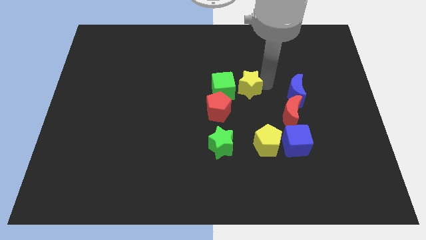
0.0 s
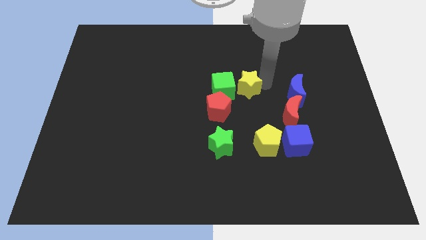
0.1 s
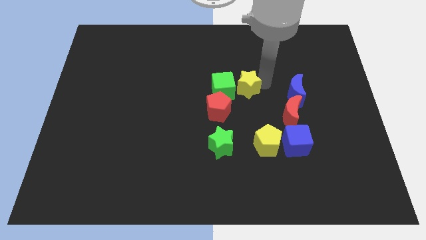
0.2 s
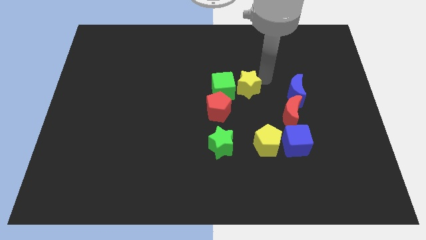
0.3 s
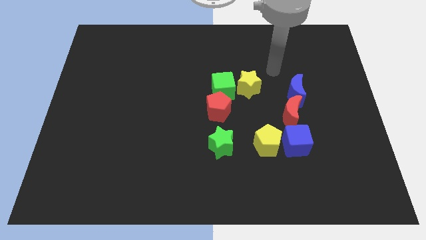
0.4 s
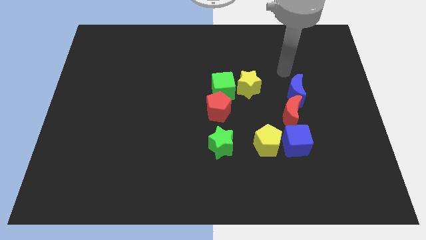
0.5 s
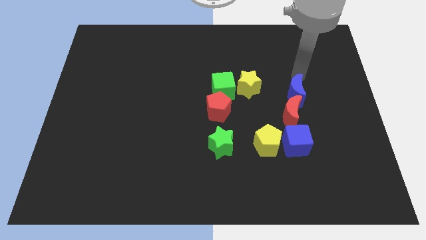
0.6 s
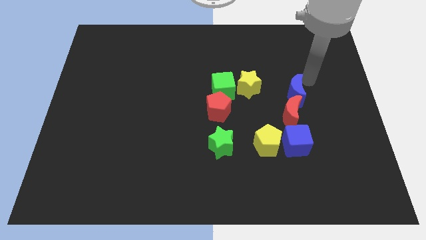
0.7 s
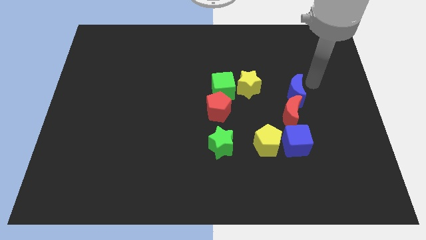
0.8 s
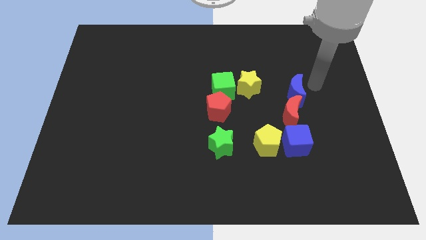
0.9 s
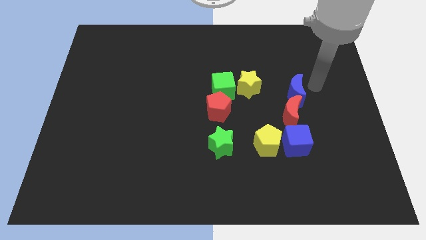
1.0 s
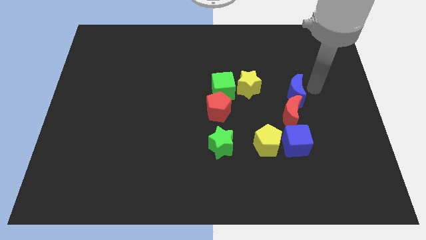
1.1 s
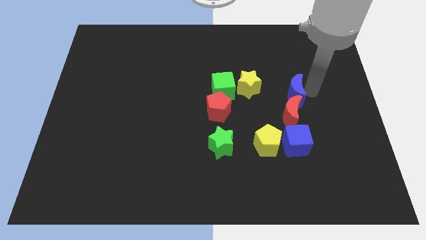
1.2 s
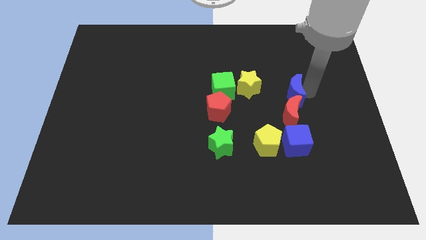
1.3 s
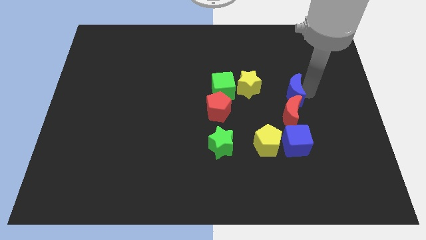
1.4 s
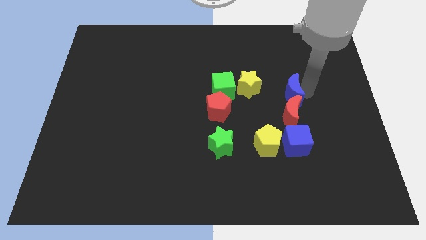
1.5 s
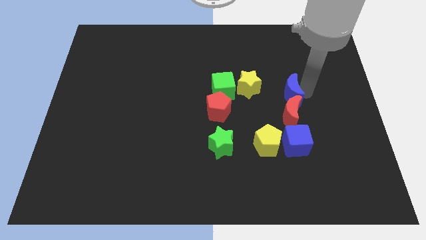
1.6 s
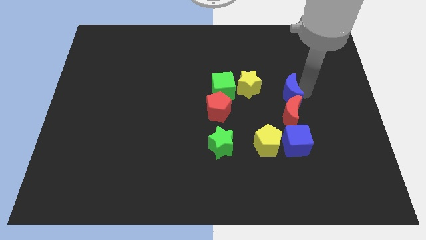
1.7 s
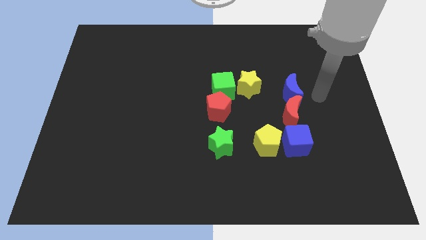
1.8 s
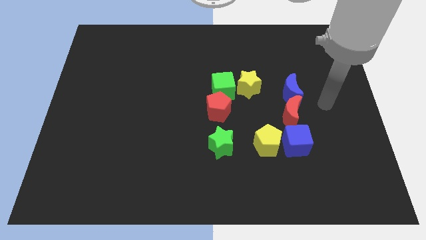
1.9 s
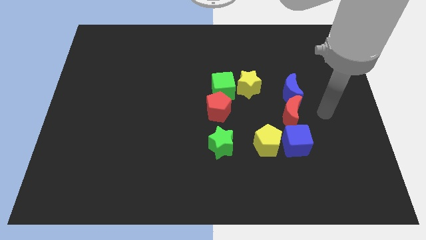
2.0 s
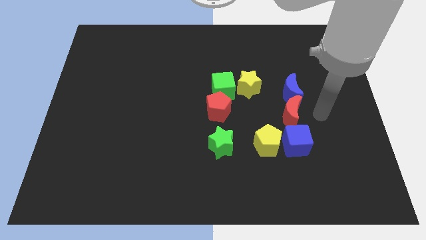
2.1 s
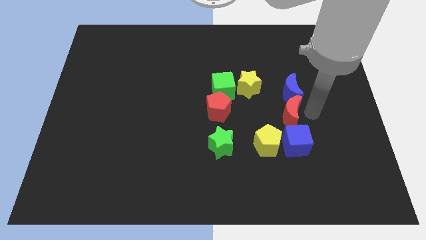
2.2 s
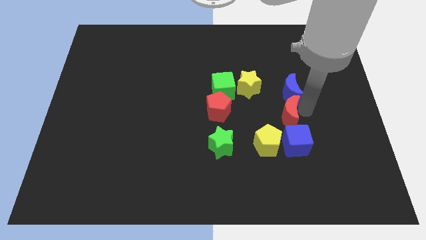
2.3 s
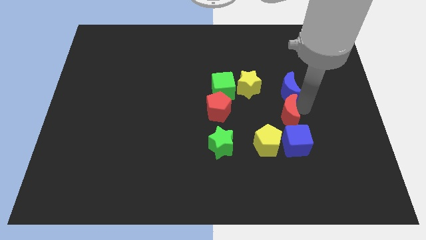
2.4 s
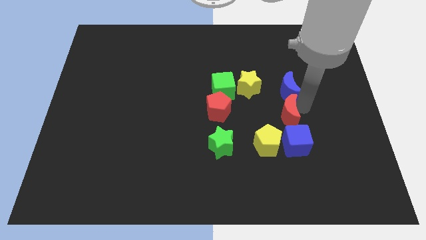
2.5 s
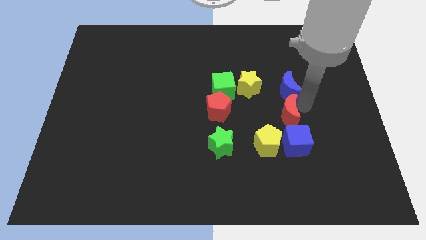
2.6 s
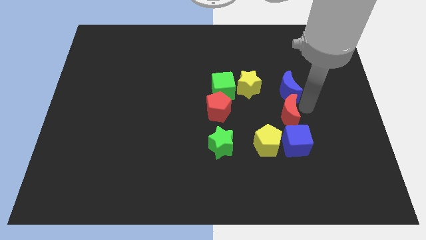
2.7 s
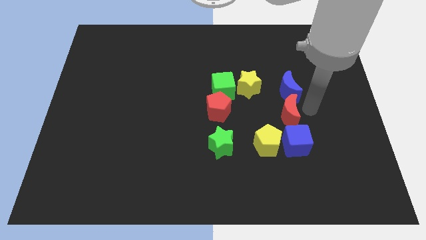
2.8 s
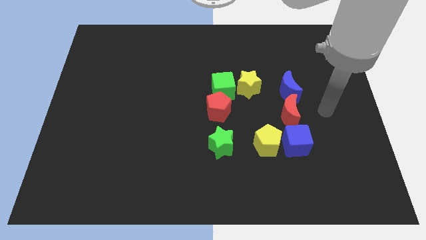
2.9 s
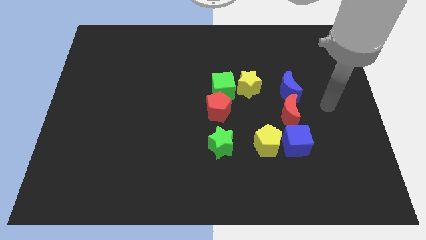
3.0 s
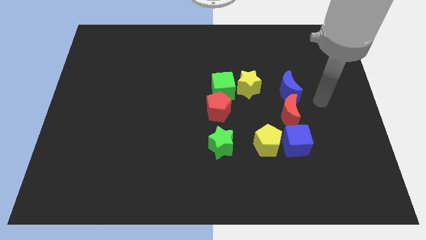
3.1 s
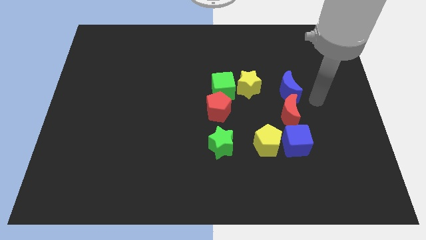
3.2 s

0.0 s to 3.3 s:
touch your arm to the red and blue moon

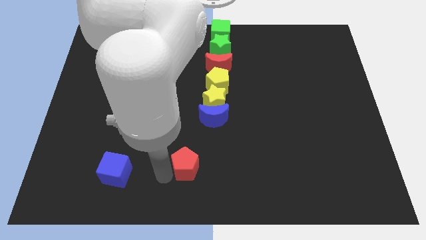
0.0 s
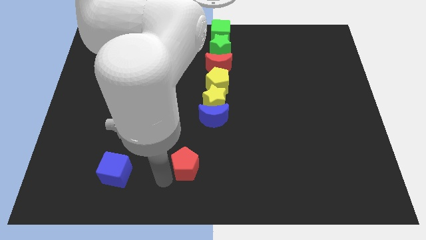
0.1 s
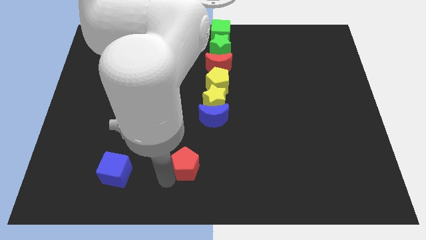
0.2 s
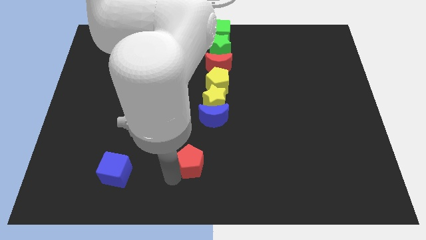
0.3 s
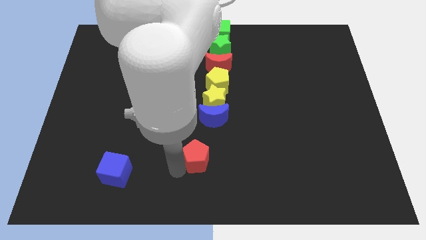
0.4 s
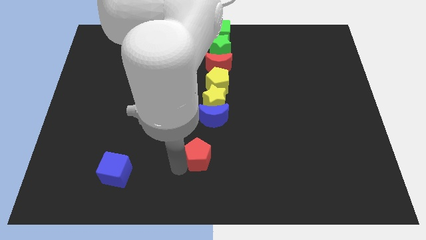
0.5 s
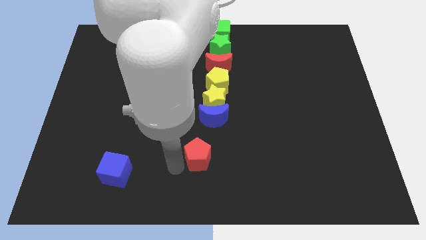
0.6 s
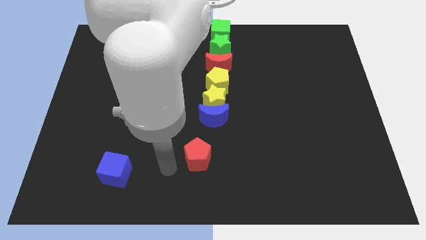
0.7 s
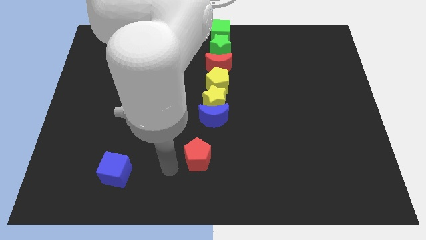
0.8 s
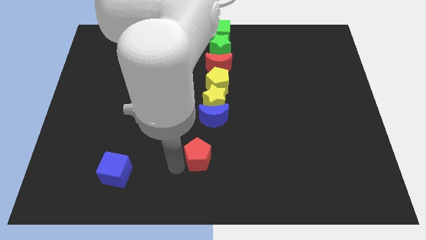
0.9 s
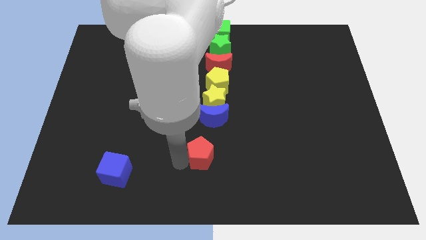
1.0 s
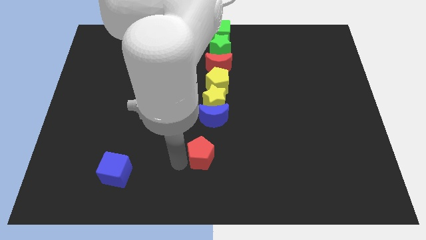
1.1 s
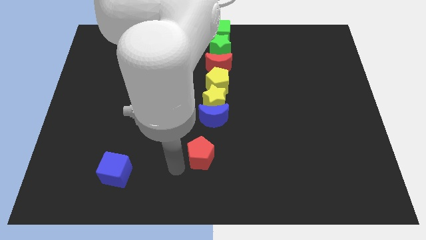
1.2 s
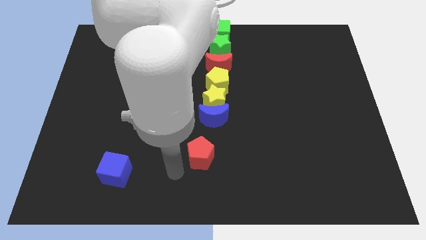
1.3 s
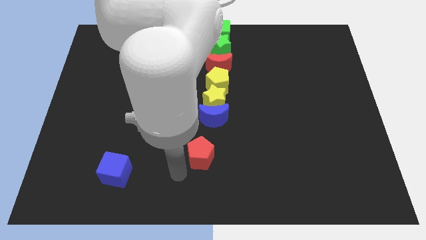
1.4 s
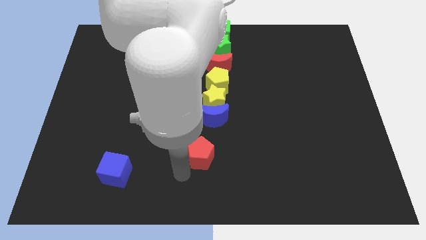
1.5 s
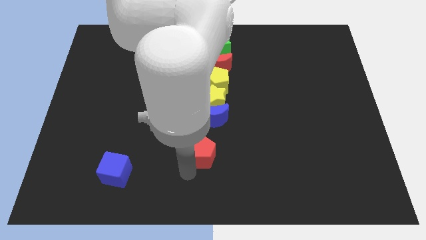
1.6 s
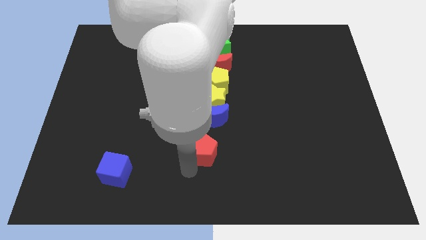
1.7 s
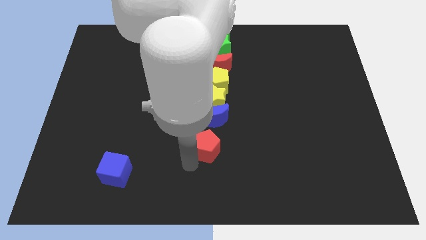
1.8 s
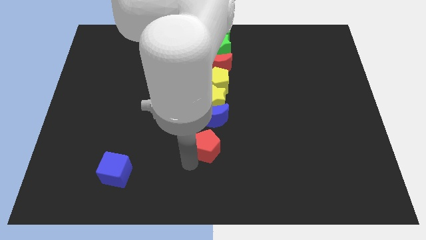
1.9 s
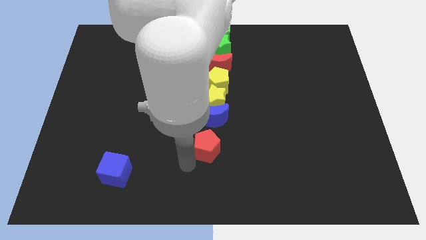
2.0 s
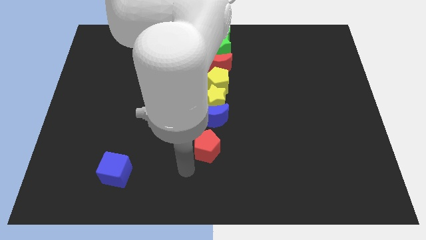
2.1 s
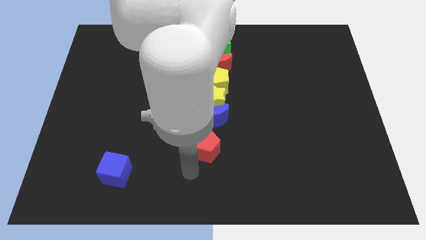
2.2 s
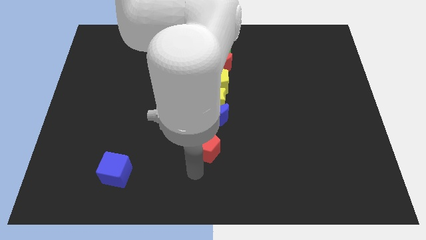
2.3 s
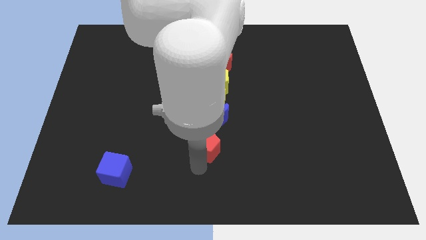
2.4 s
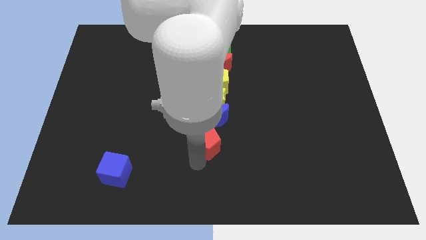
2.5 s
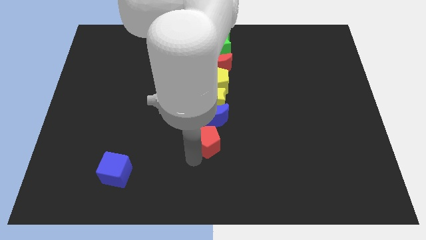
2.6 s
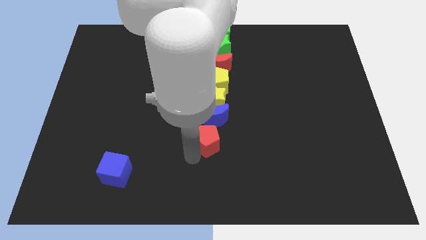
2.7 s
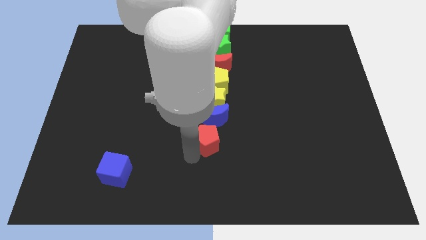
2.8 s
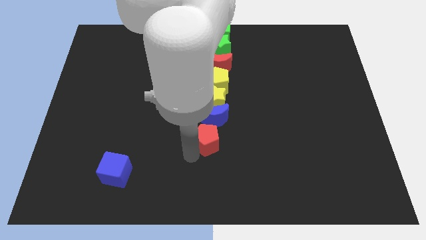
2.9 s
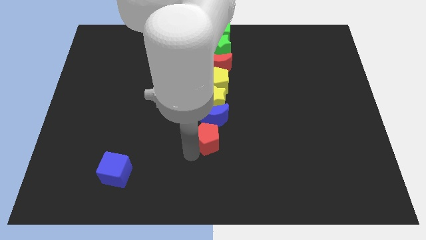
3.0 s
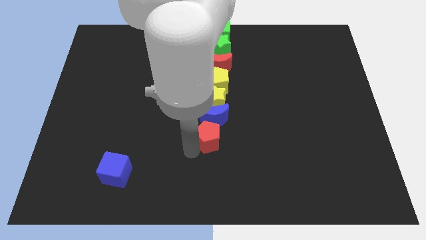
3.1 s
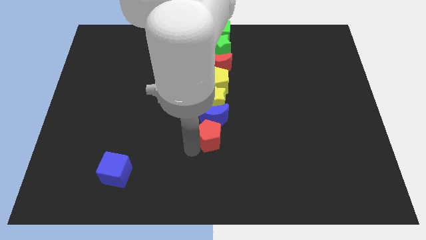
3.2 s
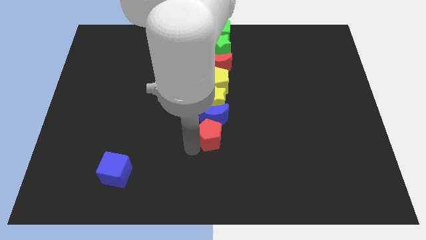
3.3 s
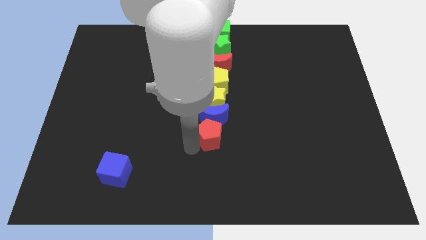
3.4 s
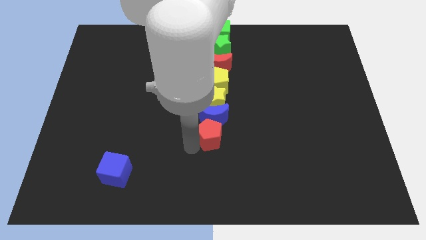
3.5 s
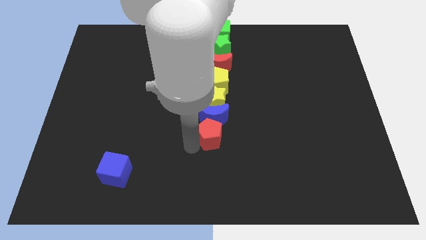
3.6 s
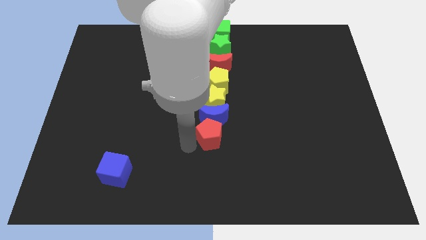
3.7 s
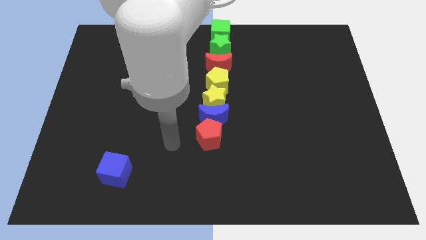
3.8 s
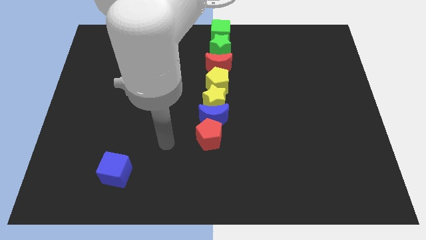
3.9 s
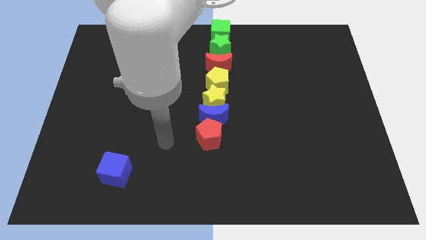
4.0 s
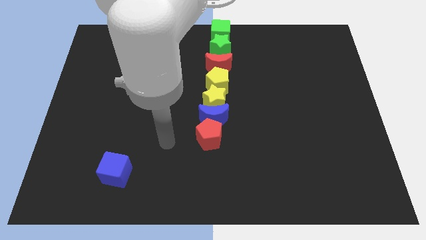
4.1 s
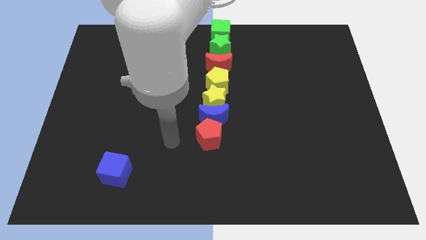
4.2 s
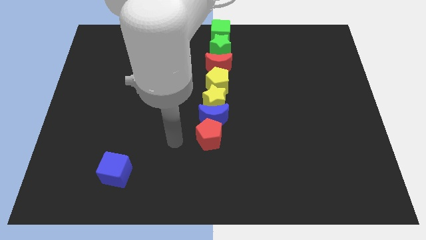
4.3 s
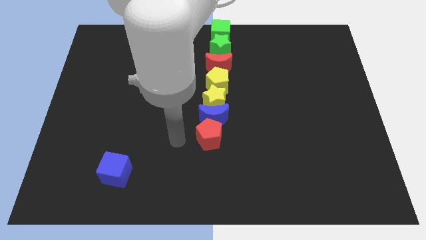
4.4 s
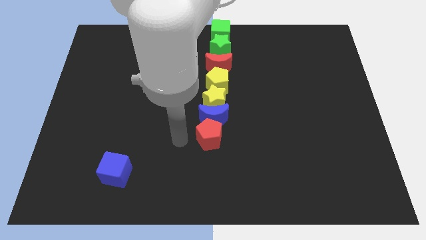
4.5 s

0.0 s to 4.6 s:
push the red pentagon into the blue moon

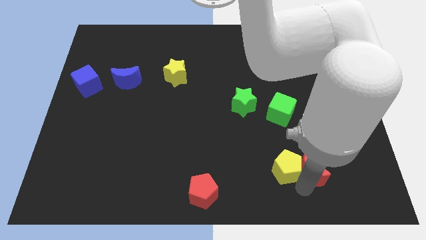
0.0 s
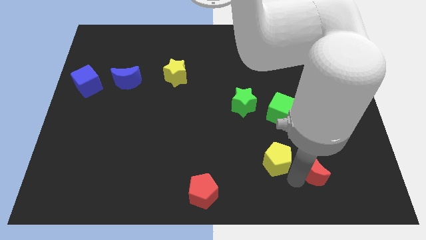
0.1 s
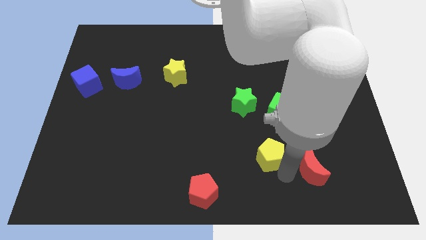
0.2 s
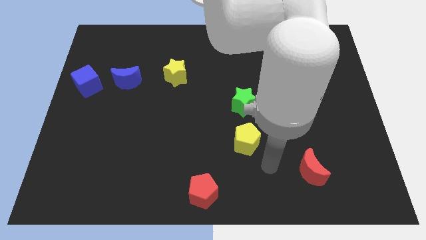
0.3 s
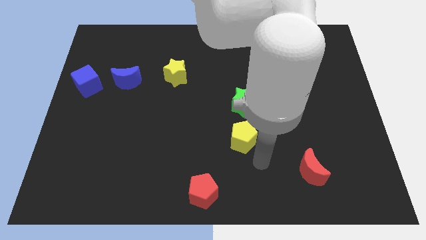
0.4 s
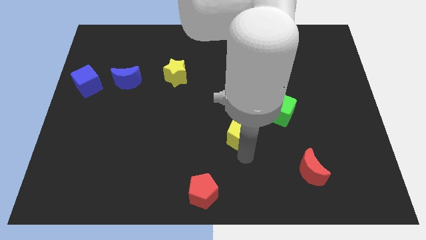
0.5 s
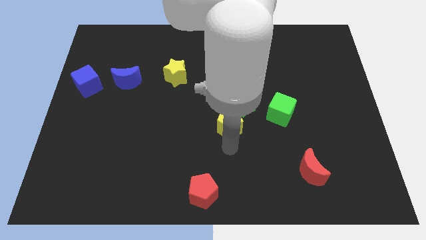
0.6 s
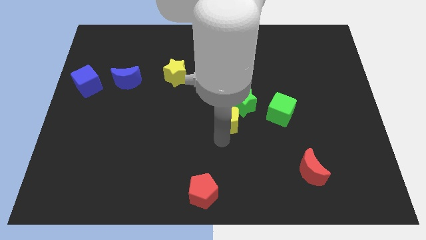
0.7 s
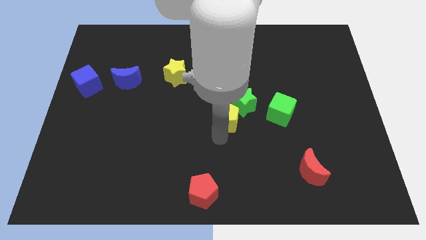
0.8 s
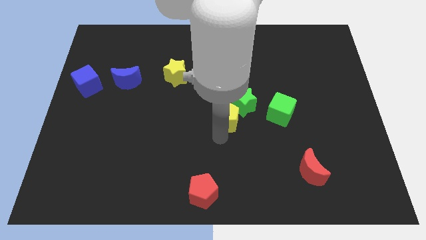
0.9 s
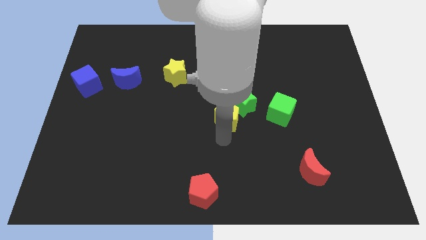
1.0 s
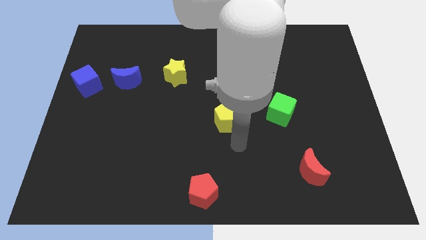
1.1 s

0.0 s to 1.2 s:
move the yellow pentagon left below the green star

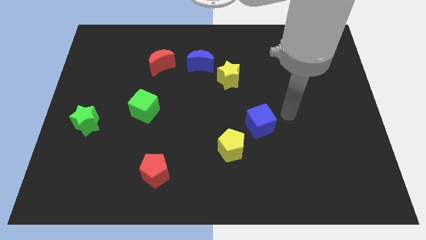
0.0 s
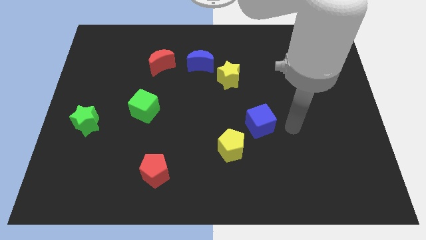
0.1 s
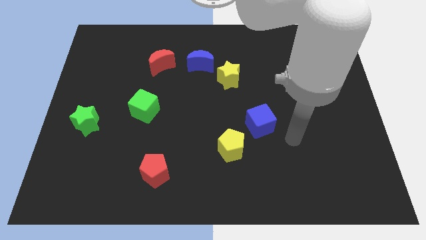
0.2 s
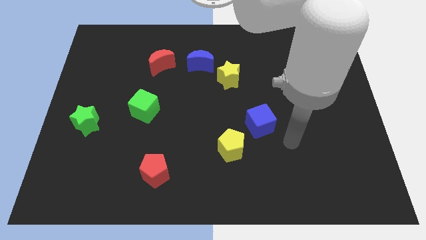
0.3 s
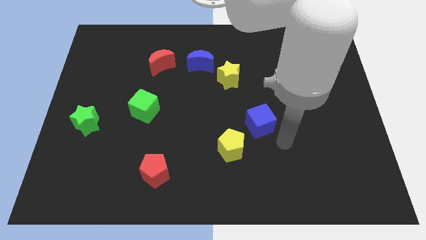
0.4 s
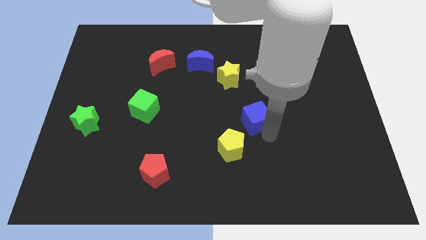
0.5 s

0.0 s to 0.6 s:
move the arm near the blue cube
